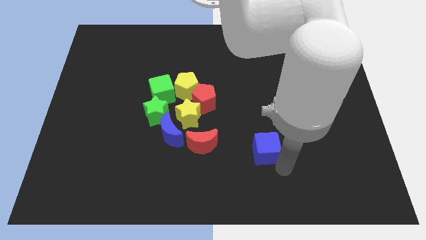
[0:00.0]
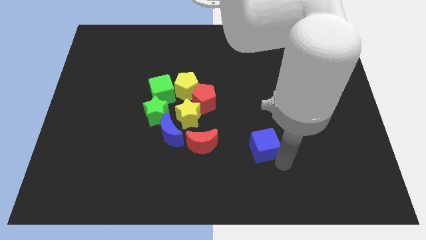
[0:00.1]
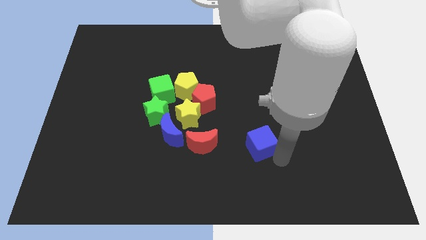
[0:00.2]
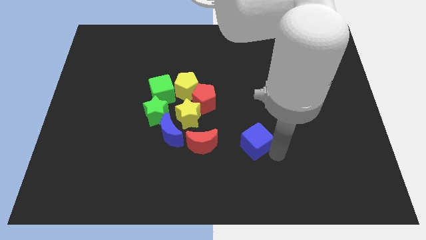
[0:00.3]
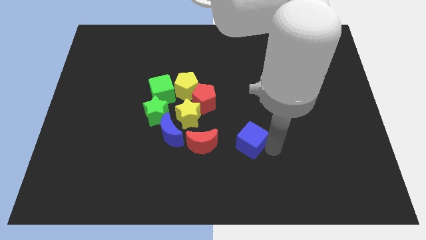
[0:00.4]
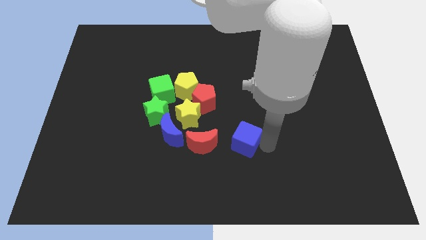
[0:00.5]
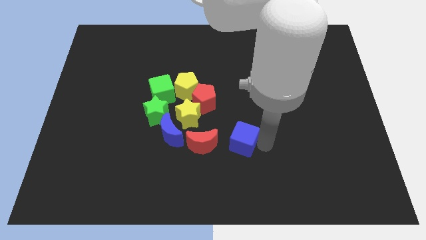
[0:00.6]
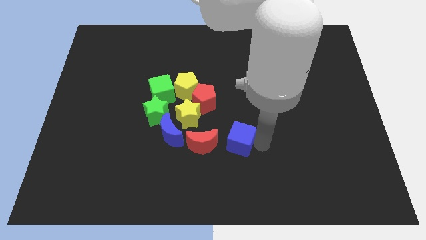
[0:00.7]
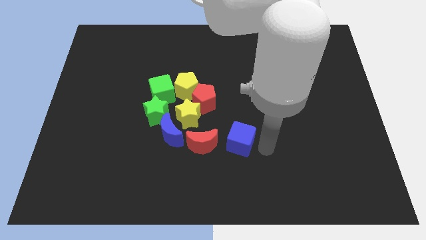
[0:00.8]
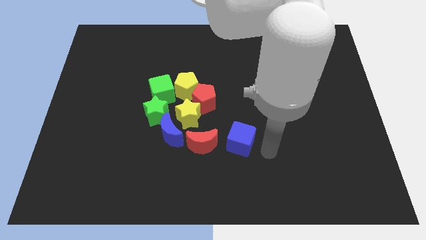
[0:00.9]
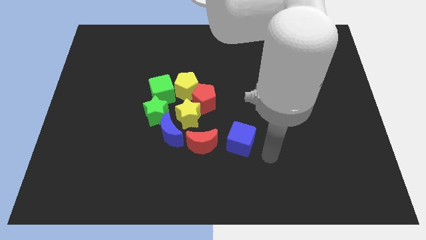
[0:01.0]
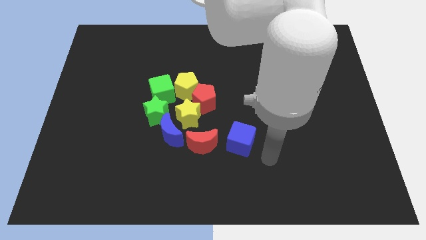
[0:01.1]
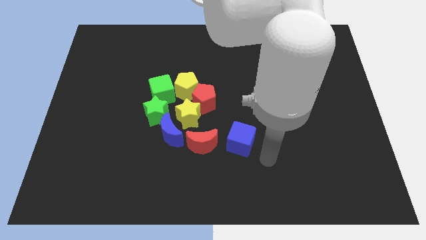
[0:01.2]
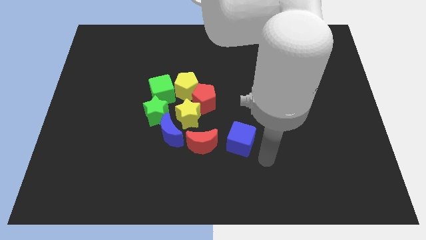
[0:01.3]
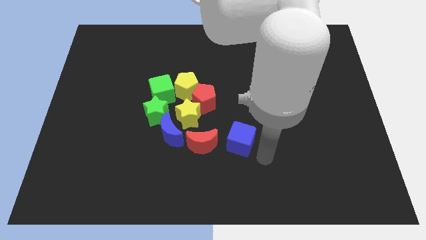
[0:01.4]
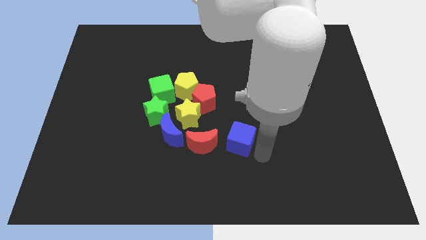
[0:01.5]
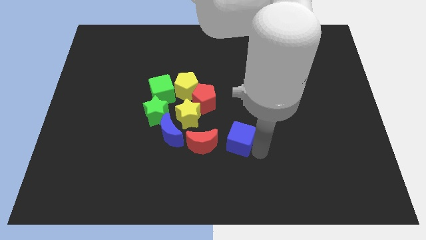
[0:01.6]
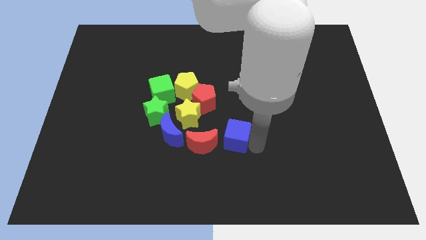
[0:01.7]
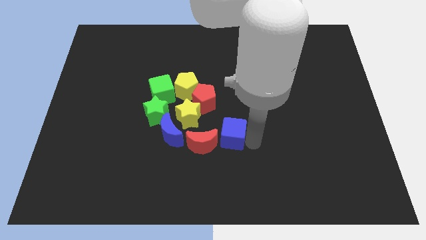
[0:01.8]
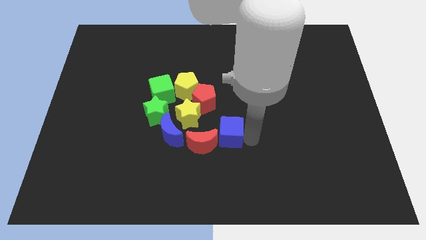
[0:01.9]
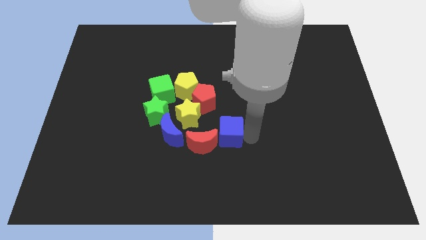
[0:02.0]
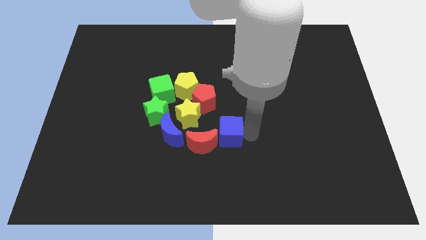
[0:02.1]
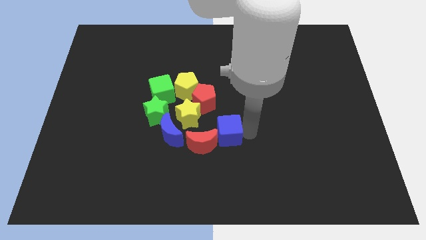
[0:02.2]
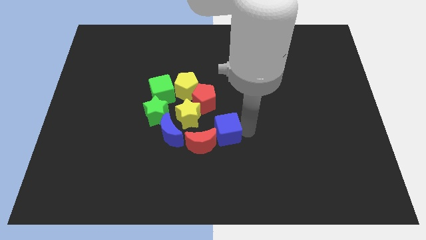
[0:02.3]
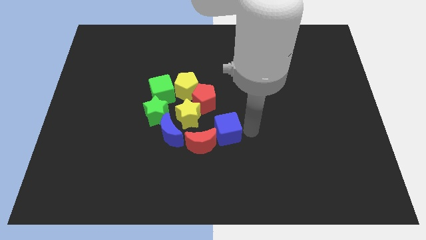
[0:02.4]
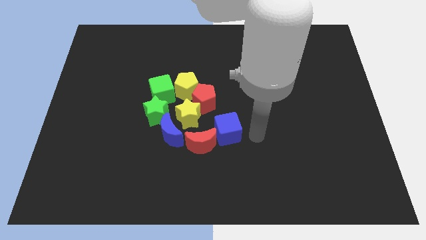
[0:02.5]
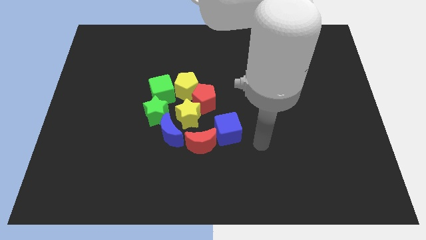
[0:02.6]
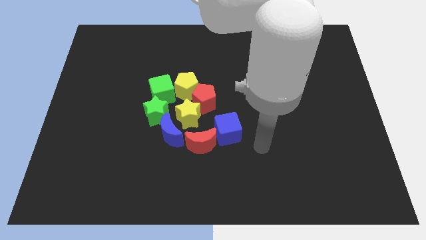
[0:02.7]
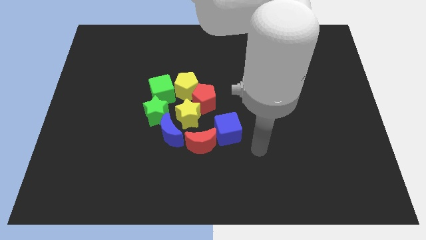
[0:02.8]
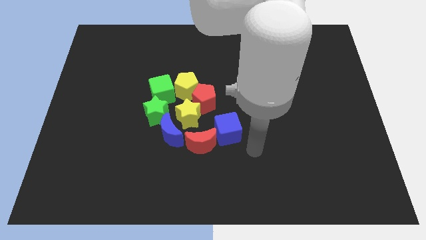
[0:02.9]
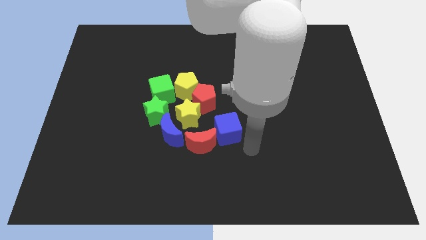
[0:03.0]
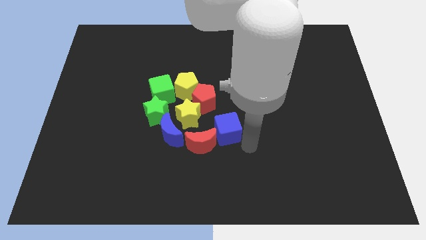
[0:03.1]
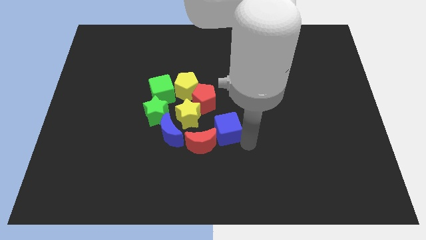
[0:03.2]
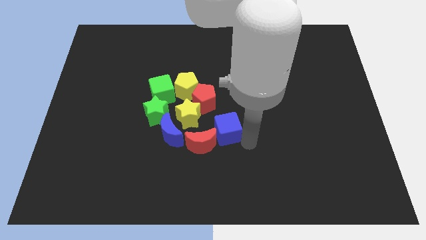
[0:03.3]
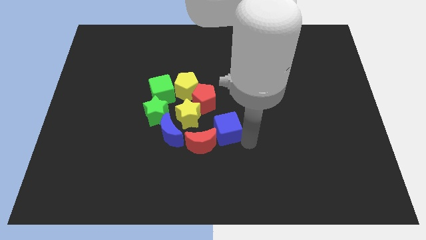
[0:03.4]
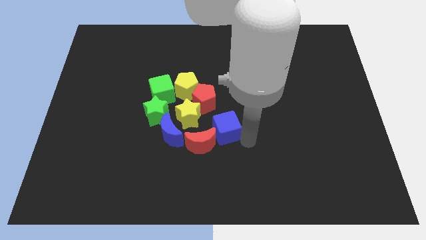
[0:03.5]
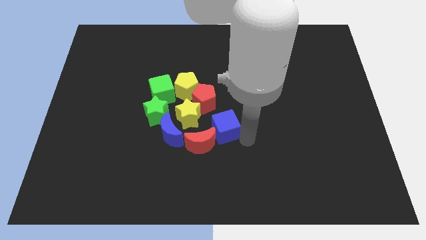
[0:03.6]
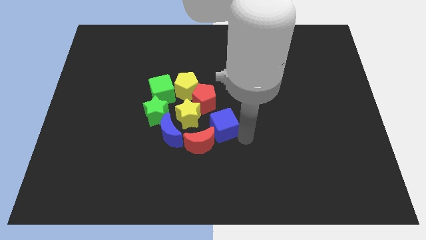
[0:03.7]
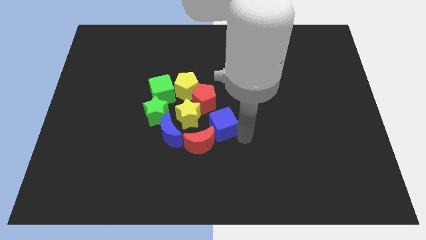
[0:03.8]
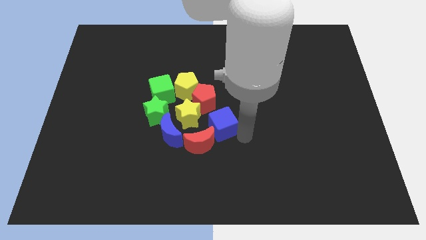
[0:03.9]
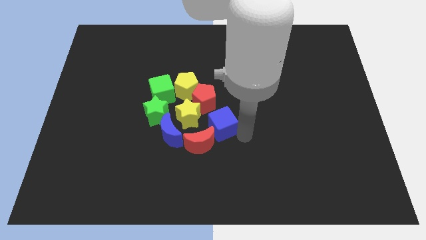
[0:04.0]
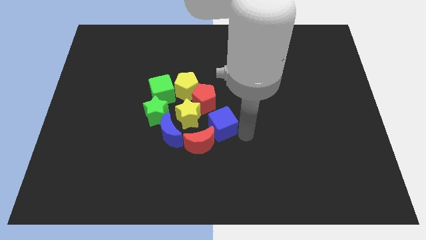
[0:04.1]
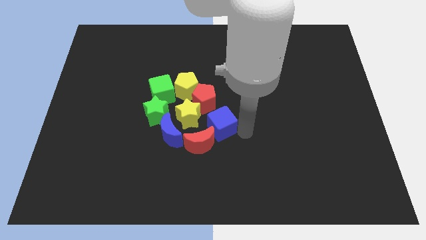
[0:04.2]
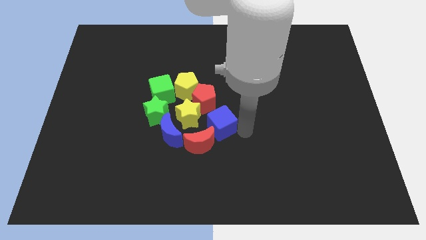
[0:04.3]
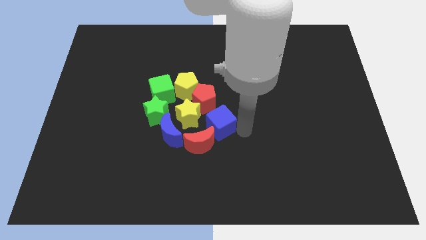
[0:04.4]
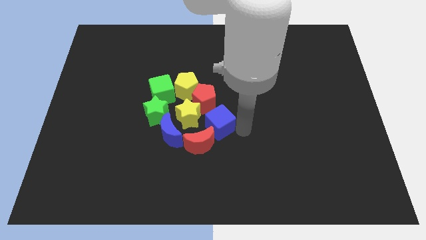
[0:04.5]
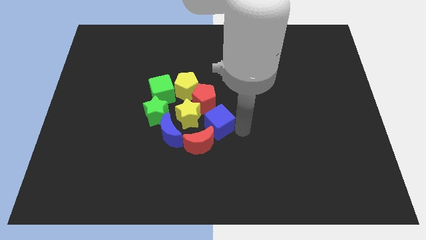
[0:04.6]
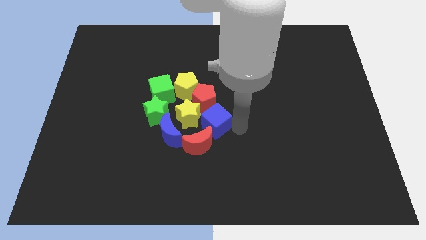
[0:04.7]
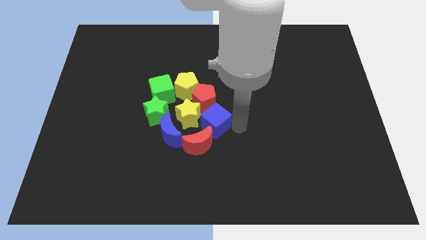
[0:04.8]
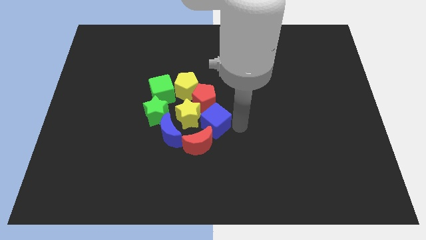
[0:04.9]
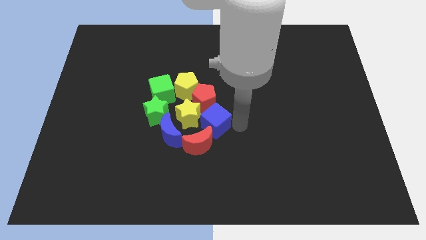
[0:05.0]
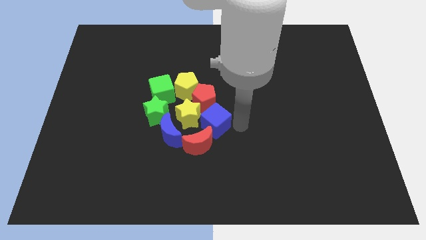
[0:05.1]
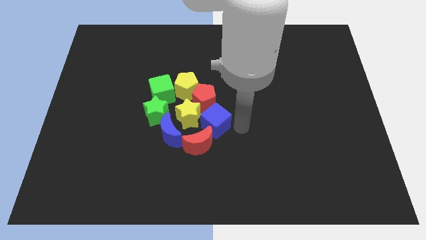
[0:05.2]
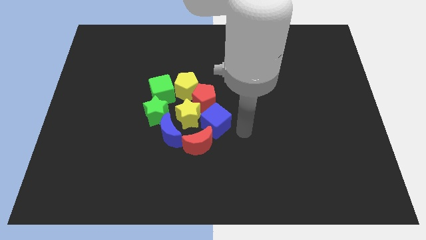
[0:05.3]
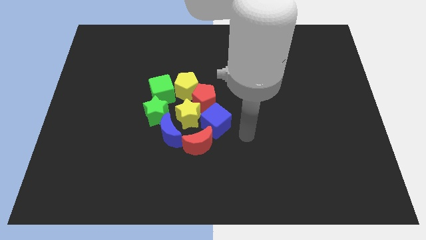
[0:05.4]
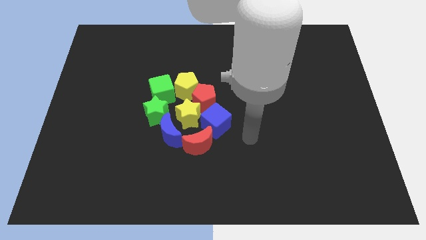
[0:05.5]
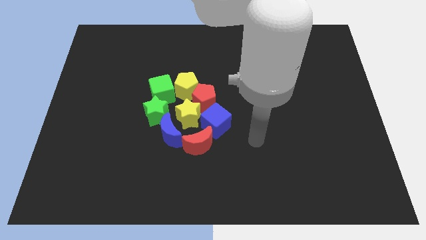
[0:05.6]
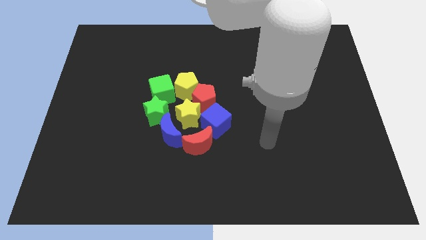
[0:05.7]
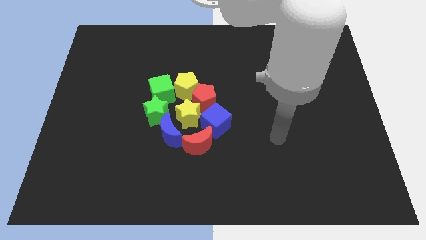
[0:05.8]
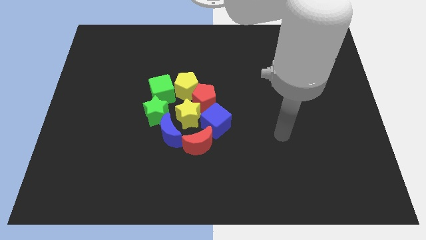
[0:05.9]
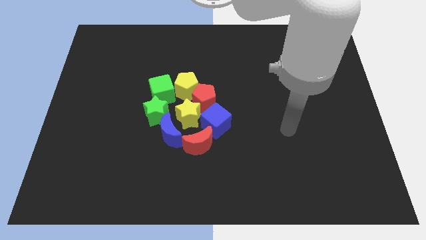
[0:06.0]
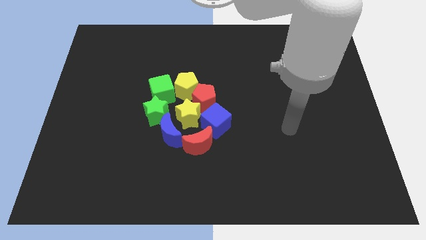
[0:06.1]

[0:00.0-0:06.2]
push the blue cube into the right of the red crescent

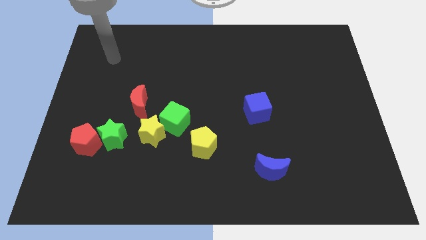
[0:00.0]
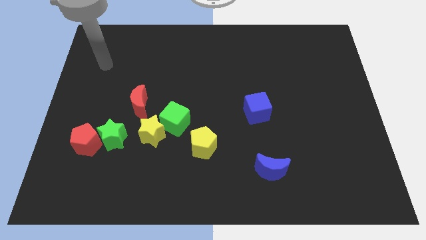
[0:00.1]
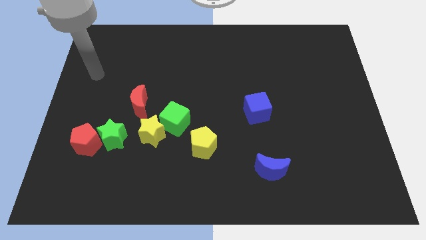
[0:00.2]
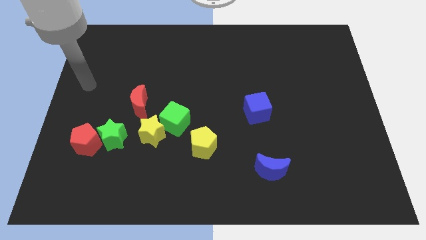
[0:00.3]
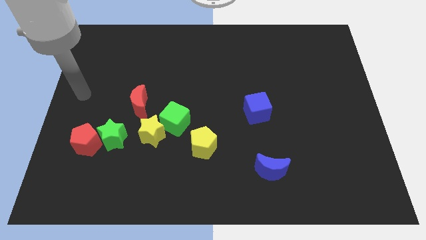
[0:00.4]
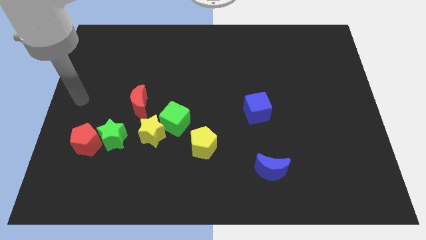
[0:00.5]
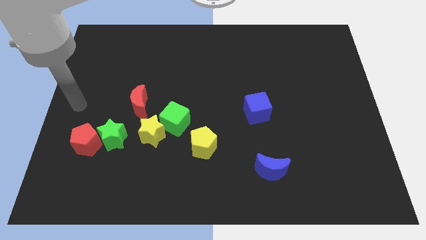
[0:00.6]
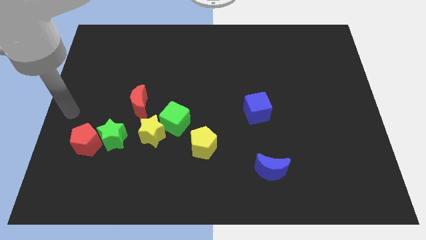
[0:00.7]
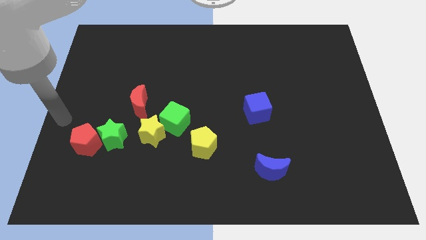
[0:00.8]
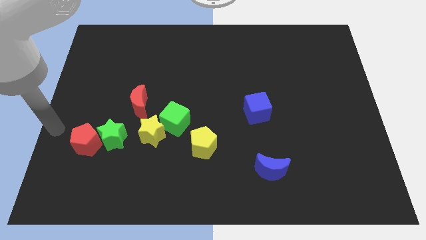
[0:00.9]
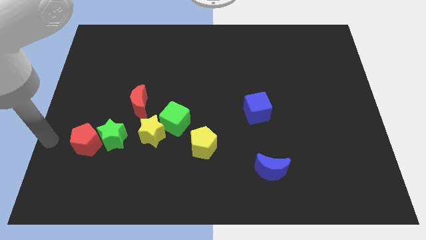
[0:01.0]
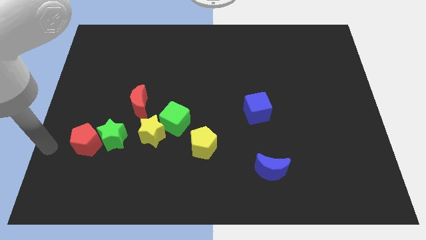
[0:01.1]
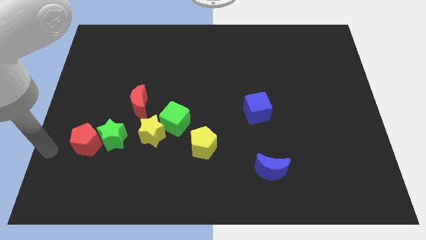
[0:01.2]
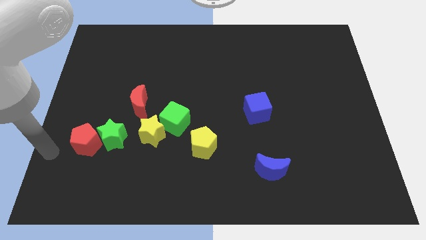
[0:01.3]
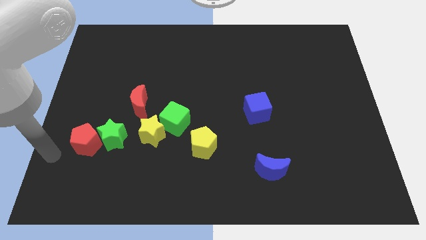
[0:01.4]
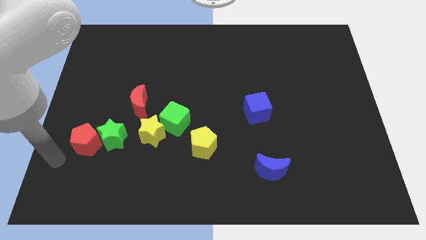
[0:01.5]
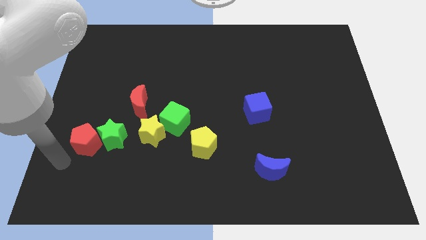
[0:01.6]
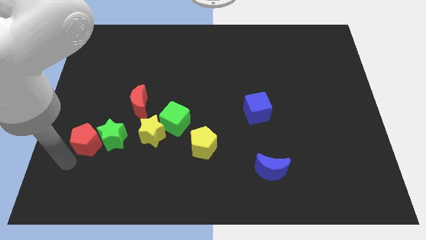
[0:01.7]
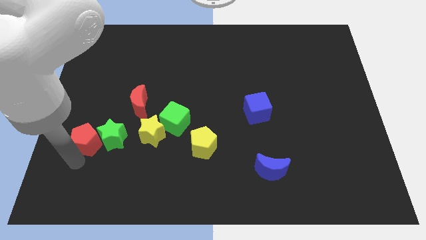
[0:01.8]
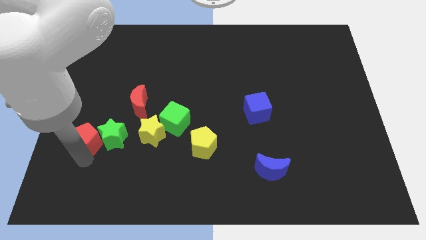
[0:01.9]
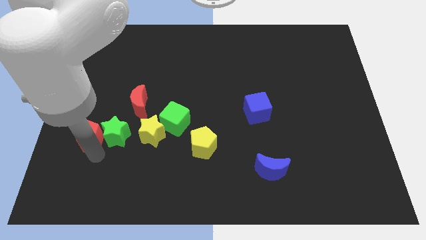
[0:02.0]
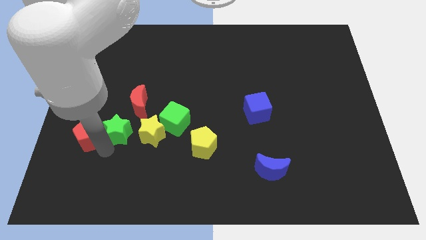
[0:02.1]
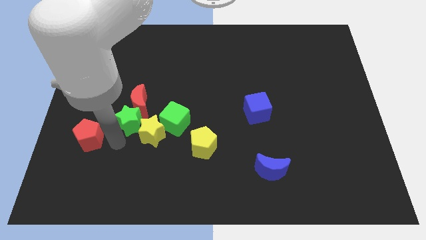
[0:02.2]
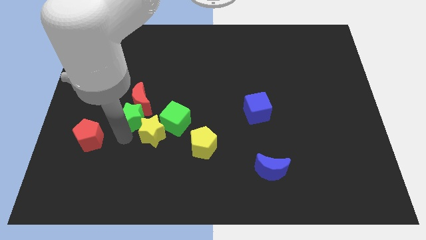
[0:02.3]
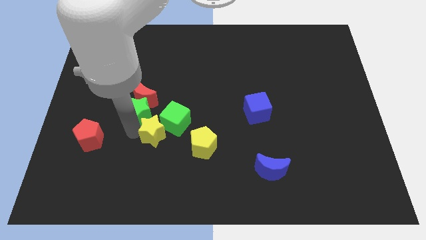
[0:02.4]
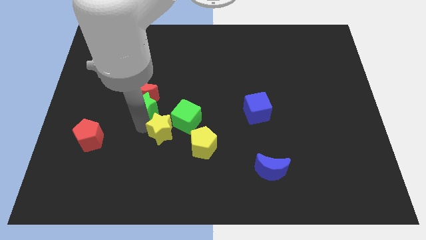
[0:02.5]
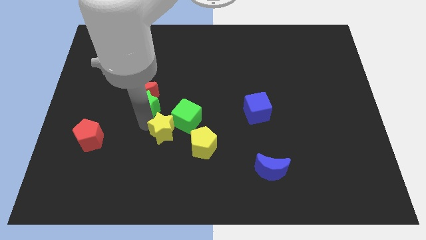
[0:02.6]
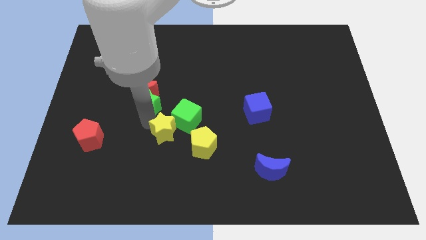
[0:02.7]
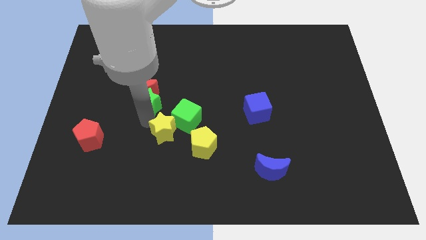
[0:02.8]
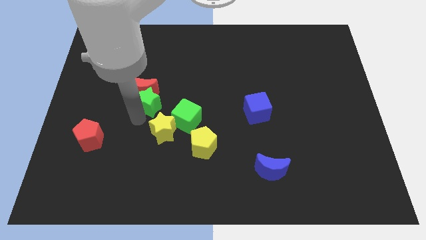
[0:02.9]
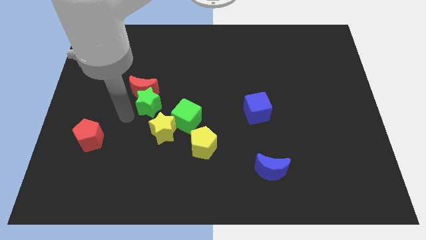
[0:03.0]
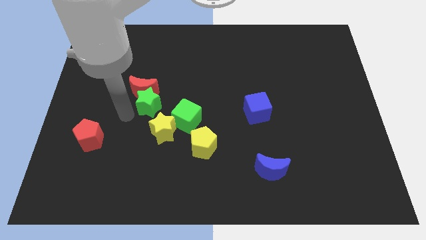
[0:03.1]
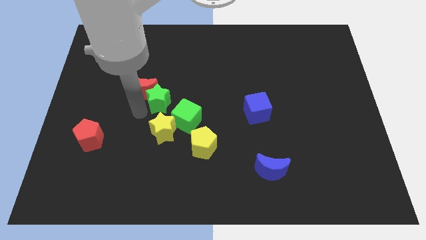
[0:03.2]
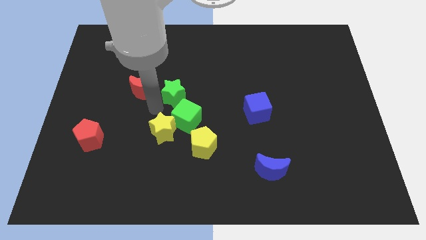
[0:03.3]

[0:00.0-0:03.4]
place your arm in between the red moon and the yellow star
